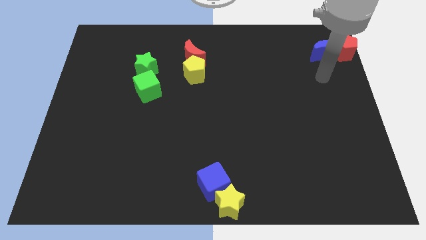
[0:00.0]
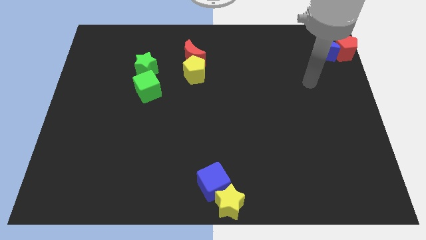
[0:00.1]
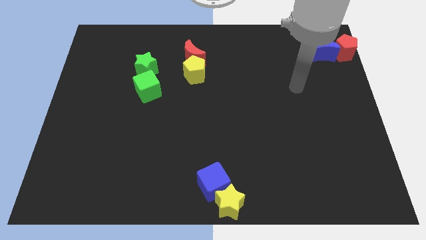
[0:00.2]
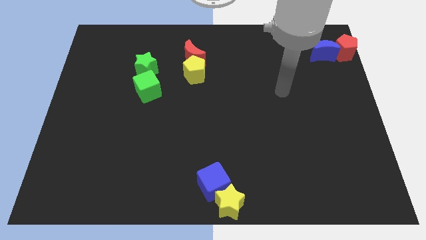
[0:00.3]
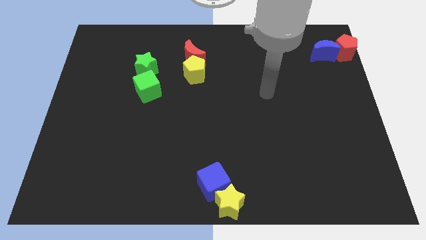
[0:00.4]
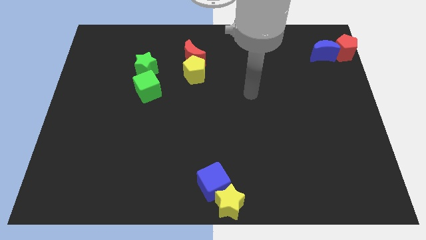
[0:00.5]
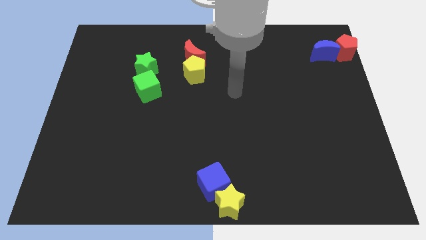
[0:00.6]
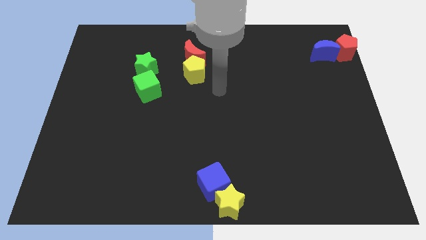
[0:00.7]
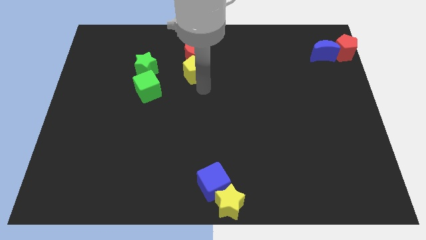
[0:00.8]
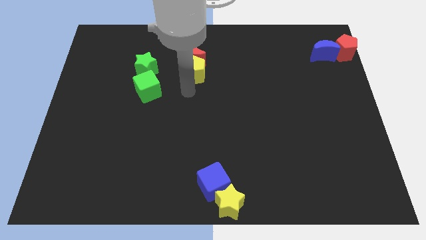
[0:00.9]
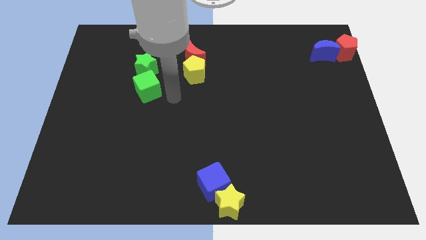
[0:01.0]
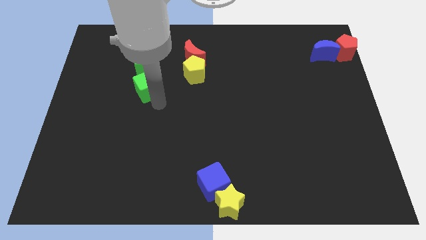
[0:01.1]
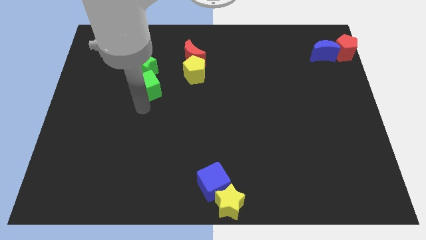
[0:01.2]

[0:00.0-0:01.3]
point your arm at the bottom side of the green cube

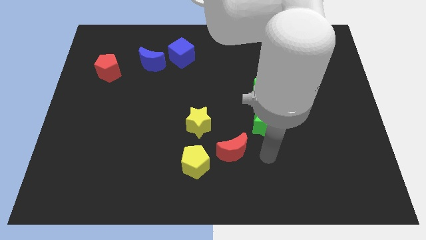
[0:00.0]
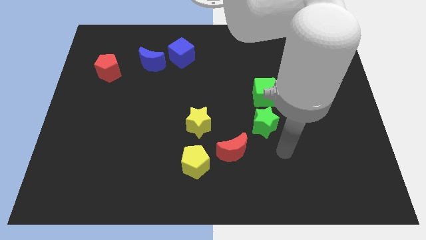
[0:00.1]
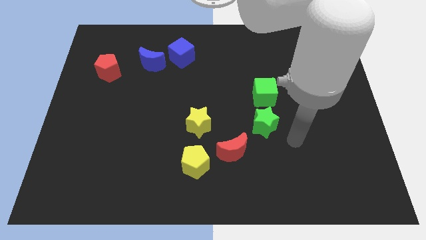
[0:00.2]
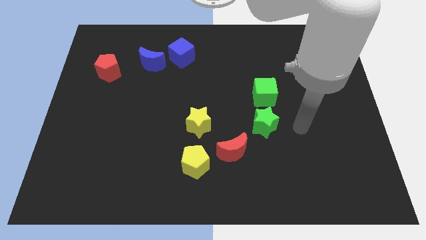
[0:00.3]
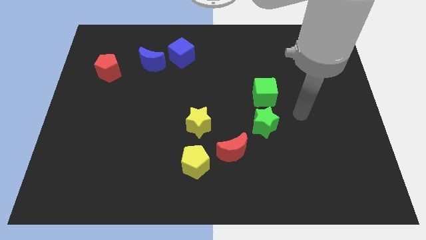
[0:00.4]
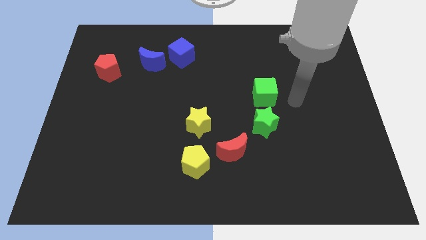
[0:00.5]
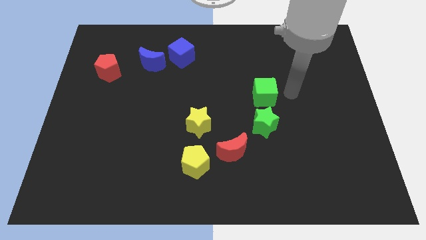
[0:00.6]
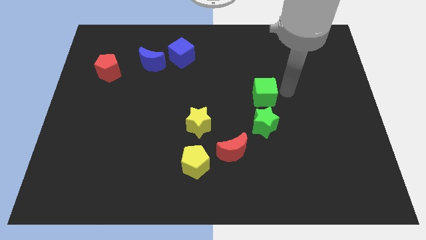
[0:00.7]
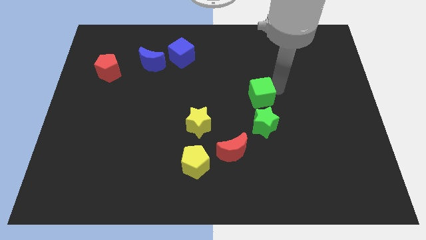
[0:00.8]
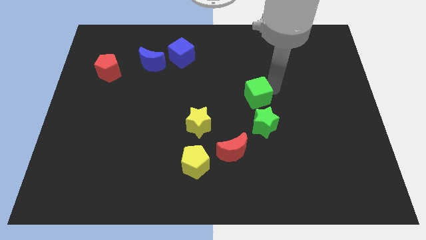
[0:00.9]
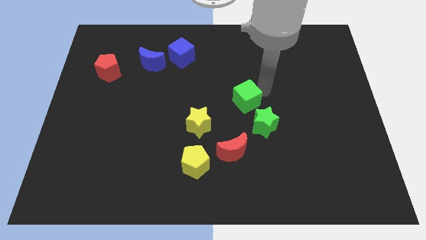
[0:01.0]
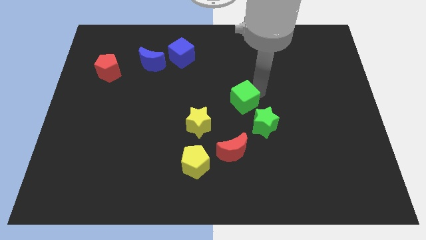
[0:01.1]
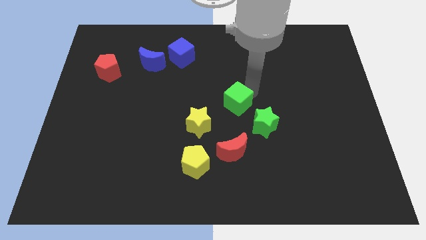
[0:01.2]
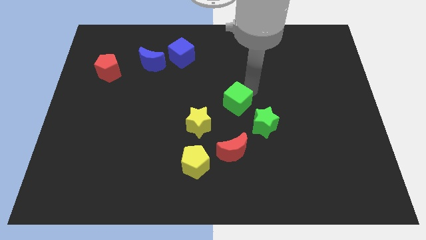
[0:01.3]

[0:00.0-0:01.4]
place green cube to the top of red moon

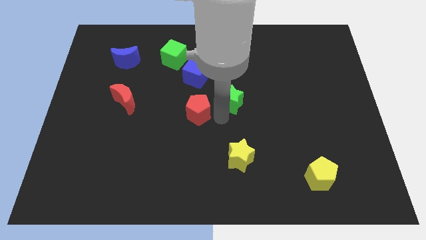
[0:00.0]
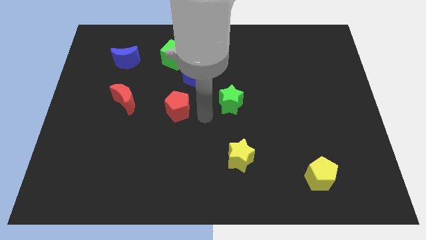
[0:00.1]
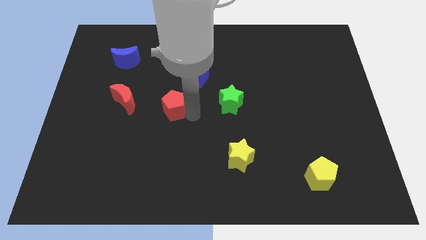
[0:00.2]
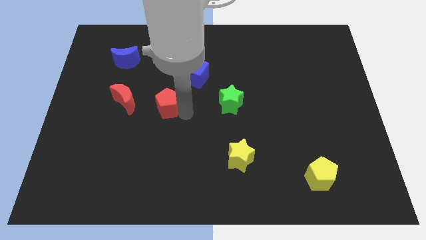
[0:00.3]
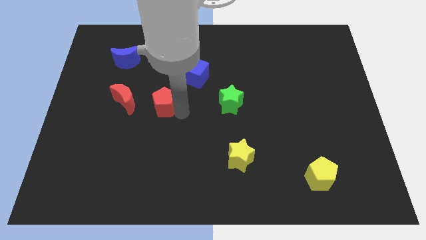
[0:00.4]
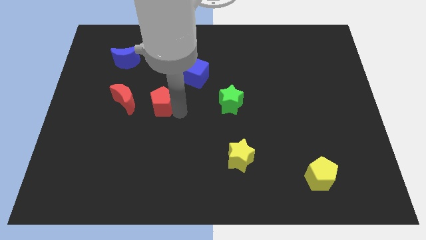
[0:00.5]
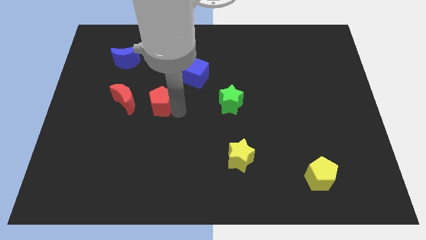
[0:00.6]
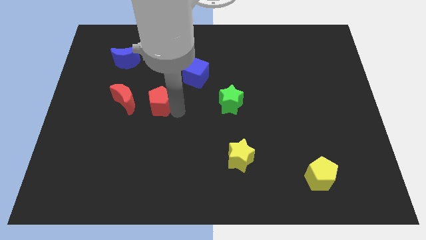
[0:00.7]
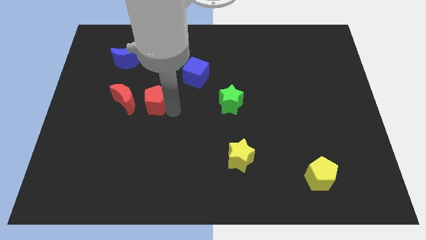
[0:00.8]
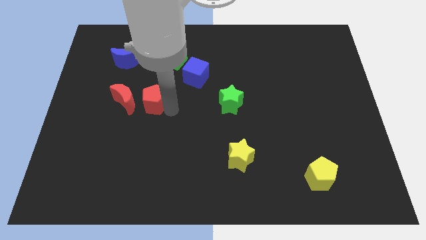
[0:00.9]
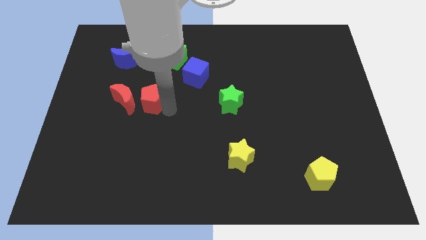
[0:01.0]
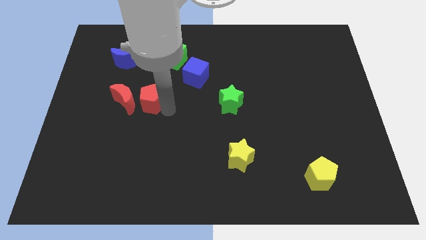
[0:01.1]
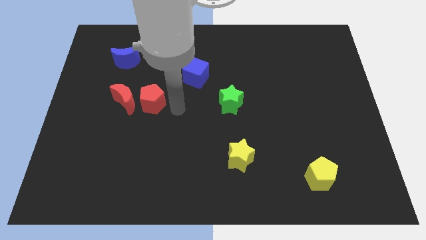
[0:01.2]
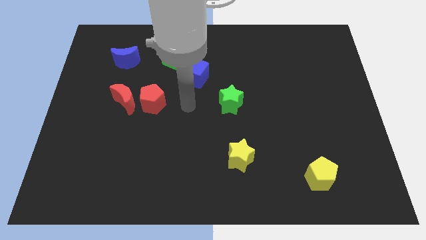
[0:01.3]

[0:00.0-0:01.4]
move red pentagon close to the red moon

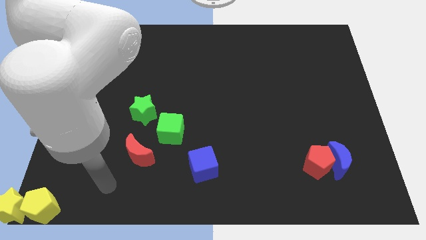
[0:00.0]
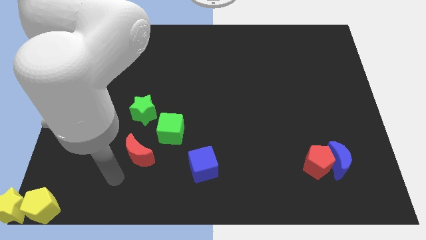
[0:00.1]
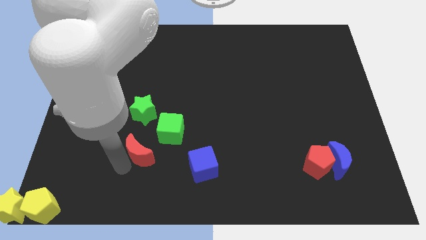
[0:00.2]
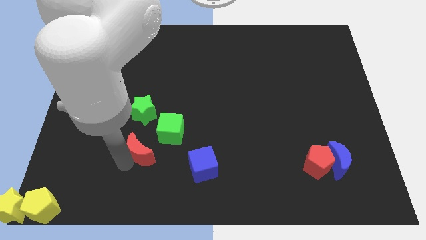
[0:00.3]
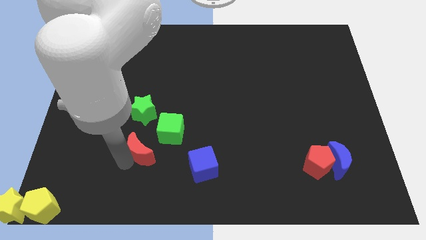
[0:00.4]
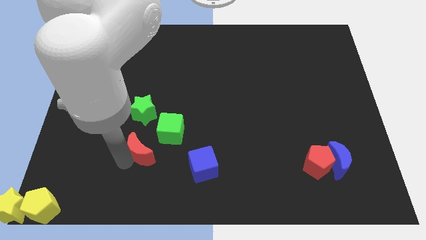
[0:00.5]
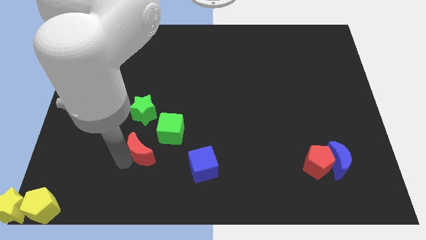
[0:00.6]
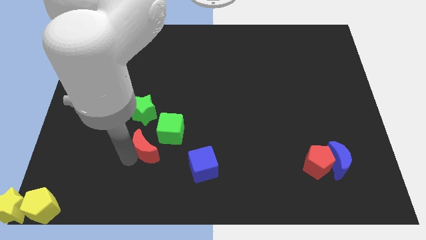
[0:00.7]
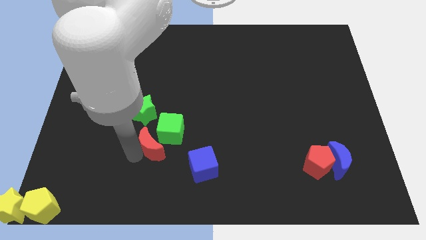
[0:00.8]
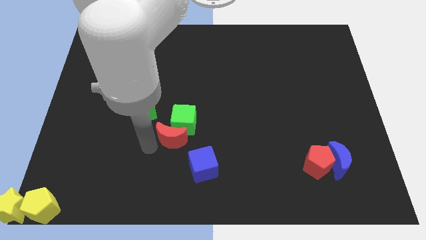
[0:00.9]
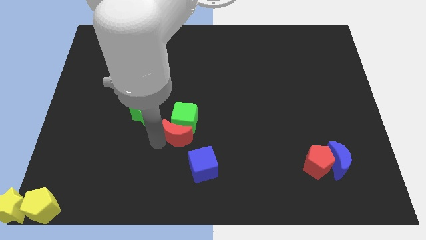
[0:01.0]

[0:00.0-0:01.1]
push half red moon towards green cube

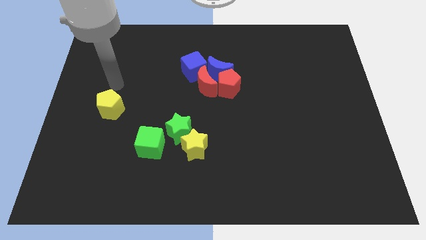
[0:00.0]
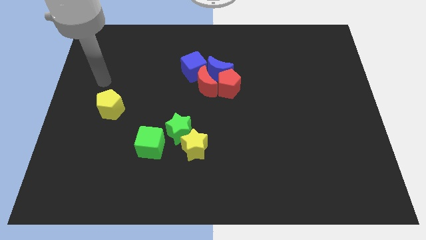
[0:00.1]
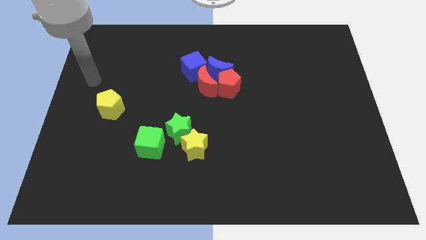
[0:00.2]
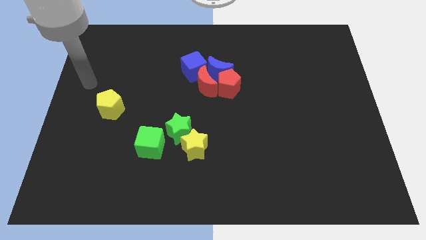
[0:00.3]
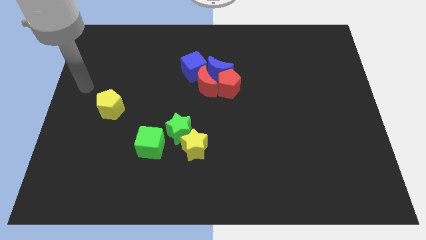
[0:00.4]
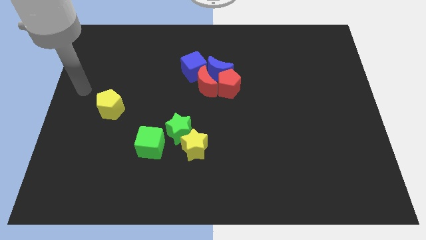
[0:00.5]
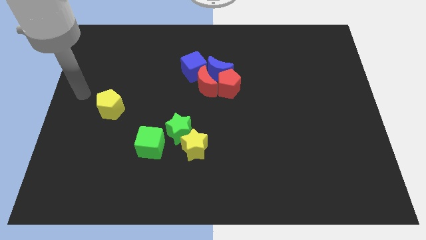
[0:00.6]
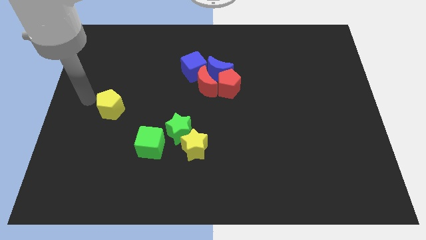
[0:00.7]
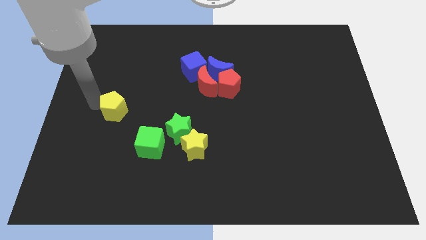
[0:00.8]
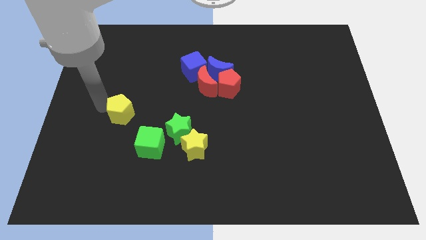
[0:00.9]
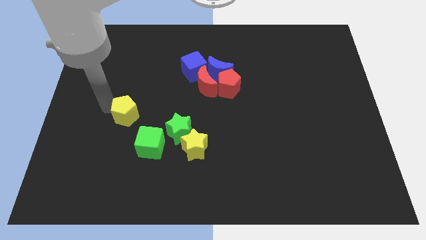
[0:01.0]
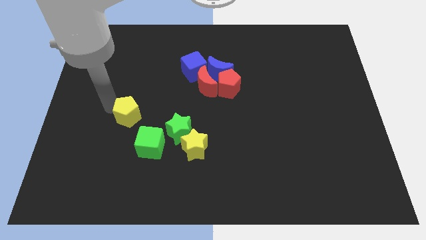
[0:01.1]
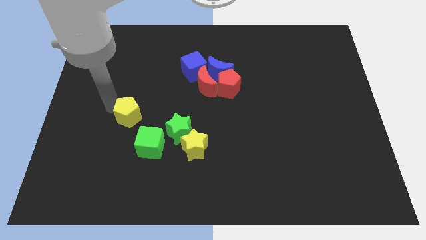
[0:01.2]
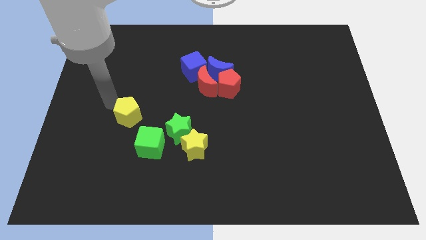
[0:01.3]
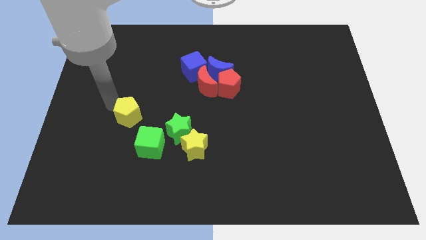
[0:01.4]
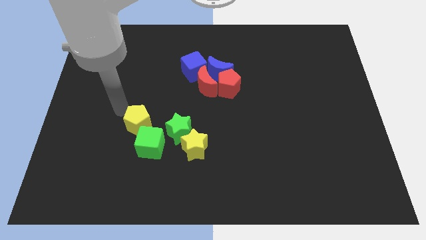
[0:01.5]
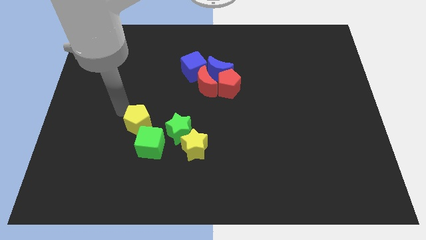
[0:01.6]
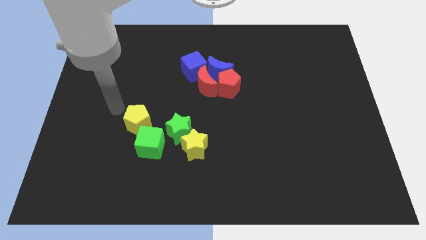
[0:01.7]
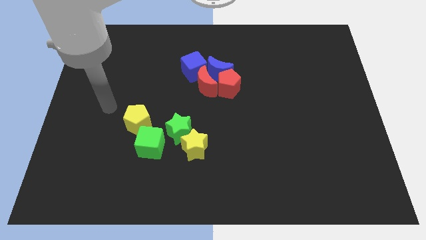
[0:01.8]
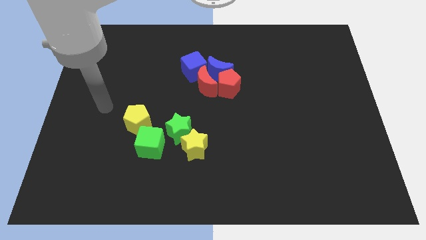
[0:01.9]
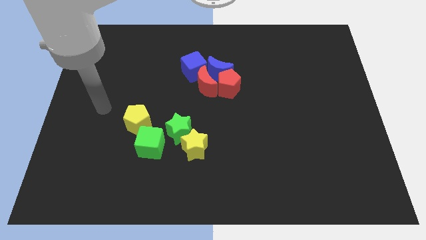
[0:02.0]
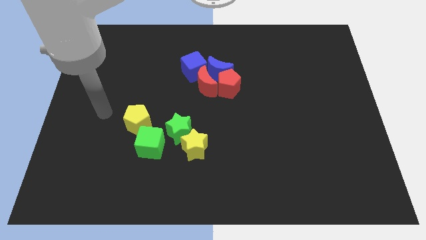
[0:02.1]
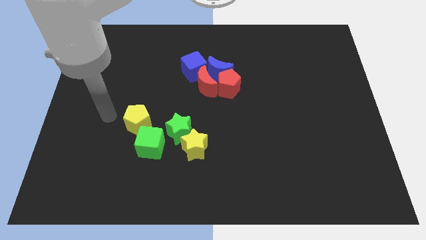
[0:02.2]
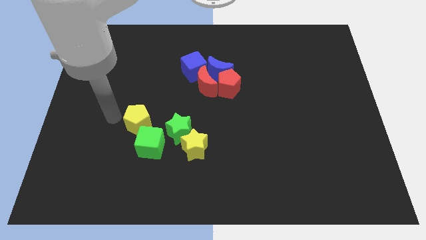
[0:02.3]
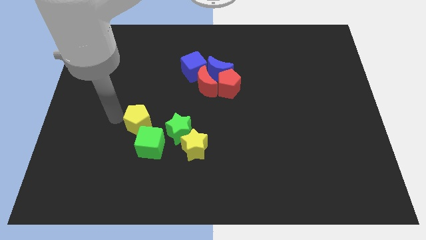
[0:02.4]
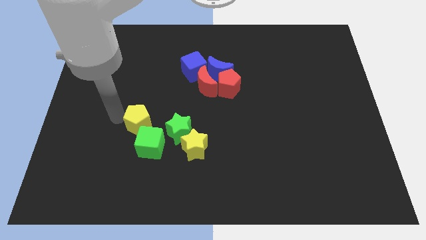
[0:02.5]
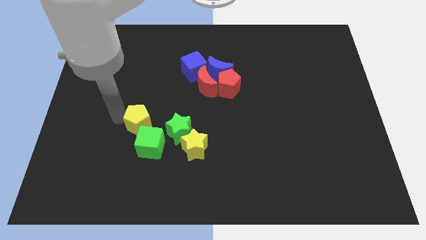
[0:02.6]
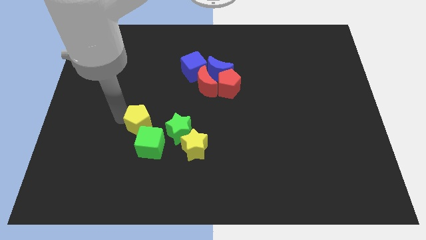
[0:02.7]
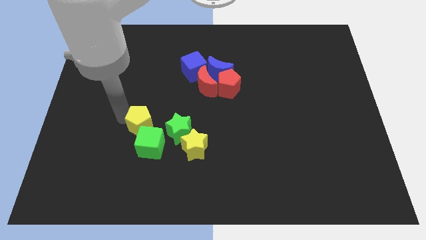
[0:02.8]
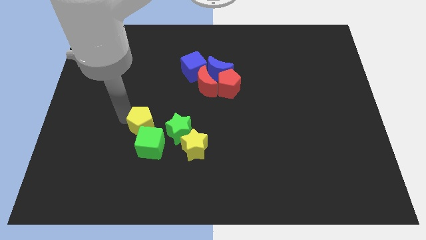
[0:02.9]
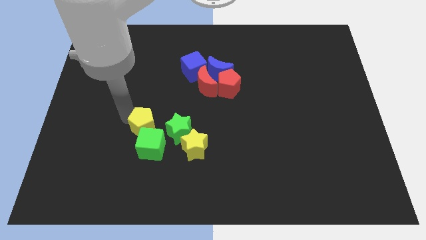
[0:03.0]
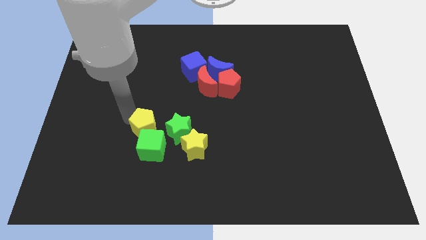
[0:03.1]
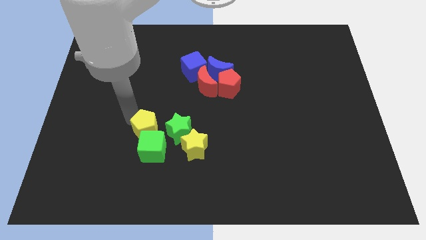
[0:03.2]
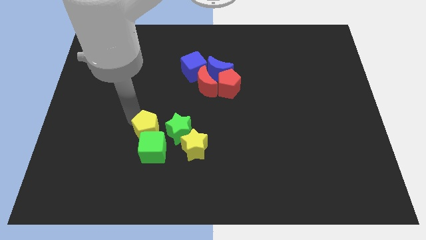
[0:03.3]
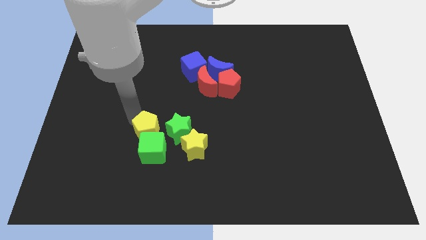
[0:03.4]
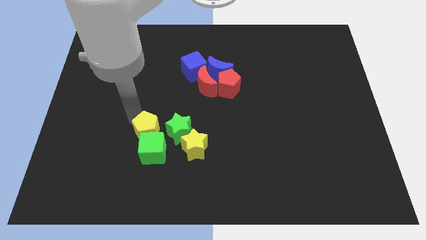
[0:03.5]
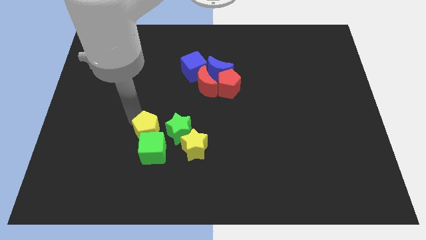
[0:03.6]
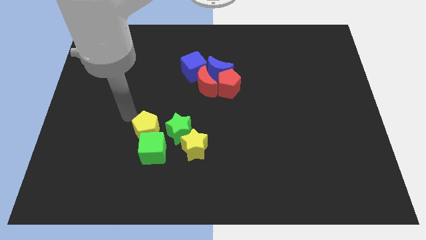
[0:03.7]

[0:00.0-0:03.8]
move the yellow pentagon into the green cube
